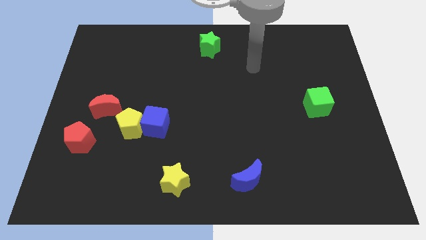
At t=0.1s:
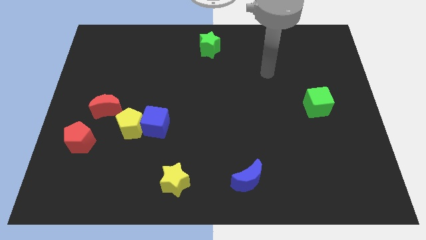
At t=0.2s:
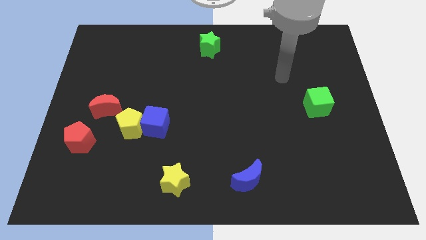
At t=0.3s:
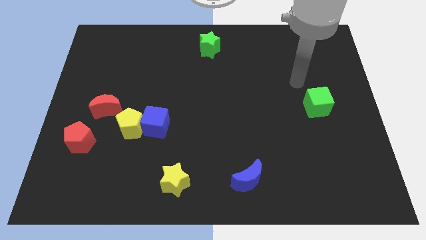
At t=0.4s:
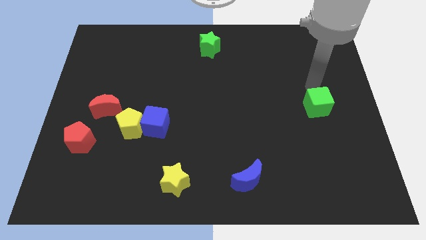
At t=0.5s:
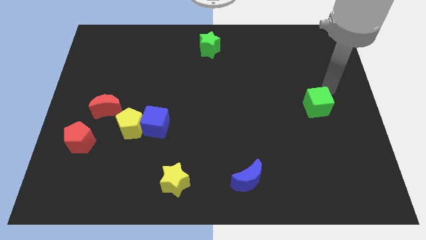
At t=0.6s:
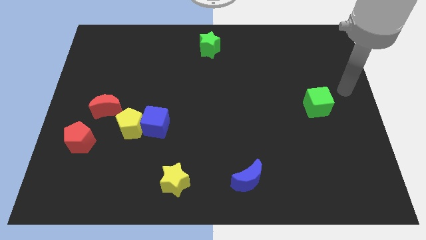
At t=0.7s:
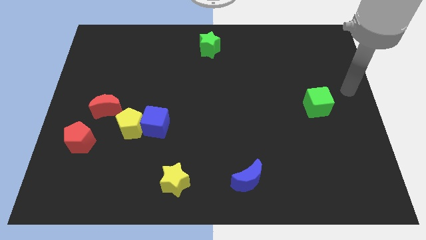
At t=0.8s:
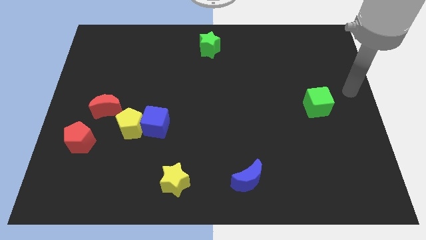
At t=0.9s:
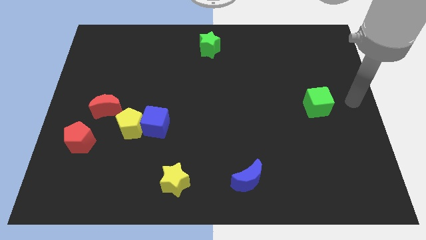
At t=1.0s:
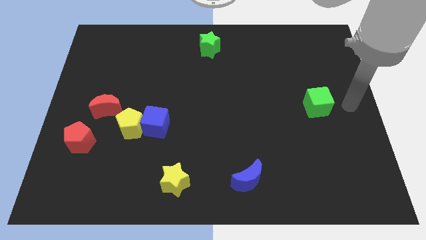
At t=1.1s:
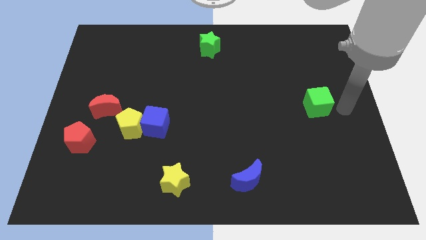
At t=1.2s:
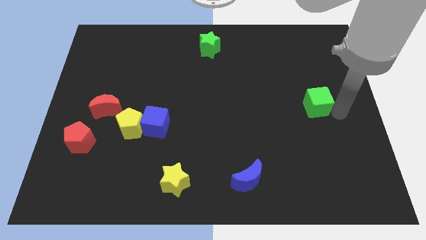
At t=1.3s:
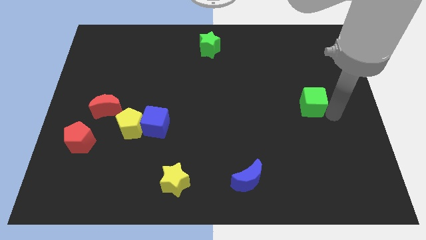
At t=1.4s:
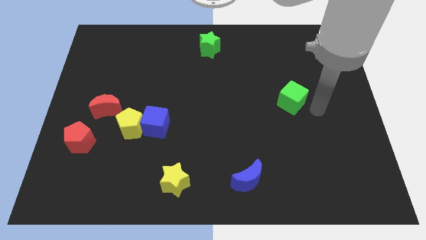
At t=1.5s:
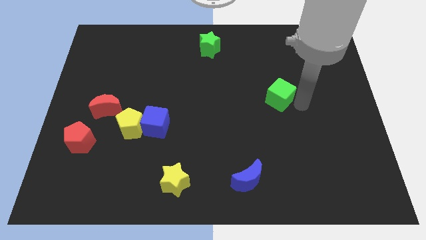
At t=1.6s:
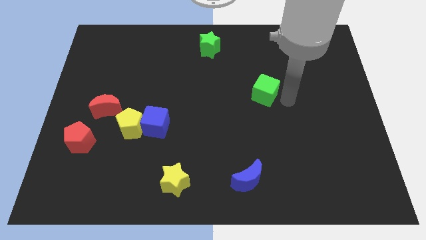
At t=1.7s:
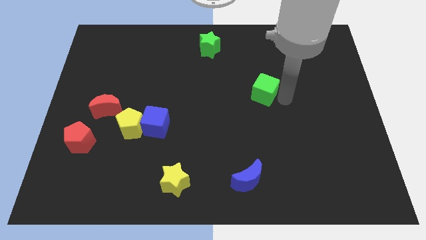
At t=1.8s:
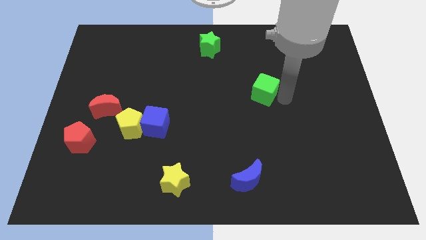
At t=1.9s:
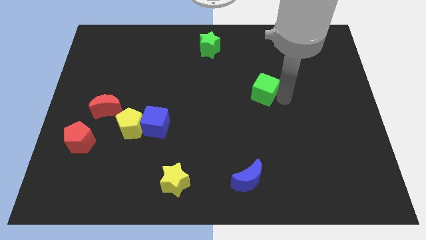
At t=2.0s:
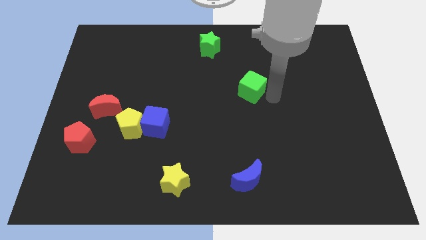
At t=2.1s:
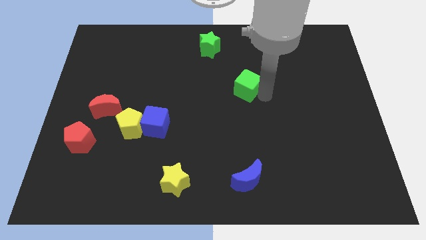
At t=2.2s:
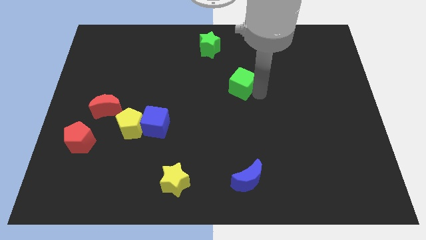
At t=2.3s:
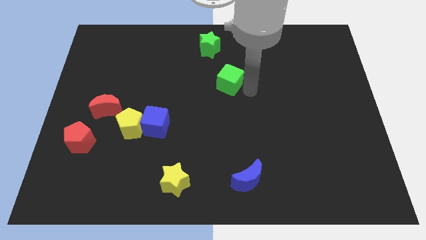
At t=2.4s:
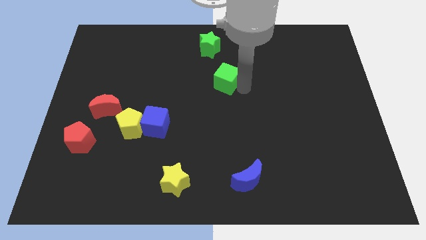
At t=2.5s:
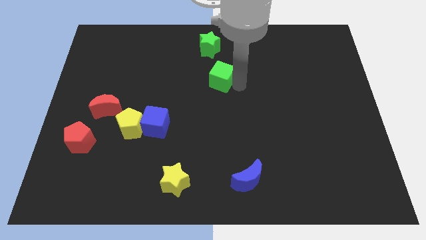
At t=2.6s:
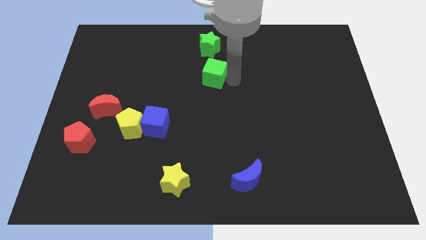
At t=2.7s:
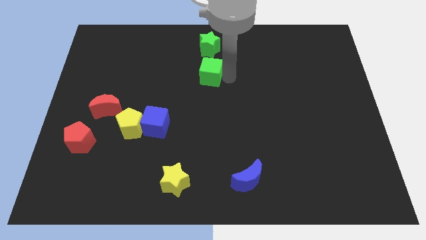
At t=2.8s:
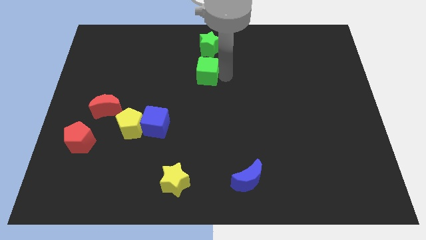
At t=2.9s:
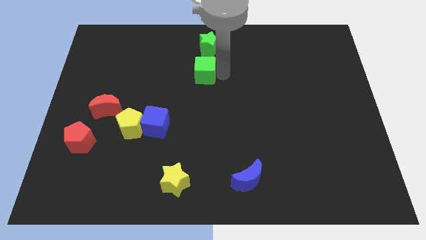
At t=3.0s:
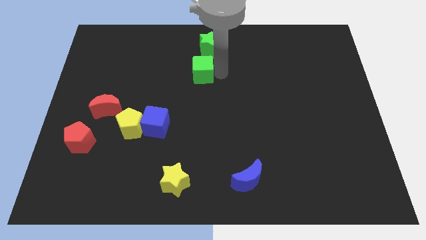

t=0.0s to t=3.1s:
move the green cube below the green star

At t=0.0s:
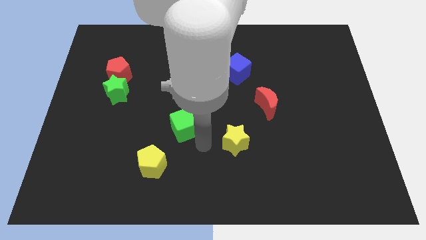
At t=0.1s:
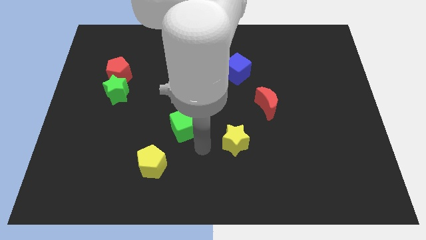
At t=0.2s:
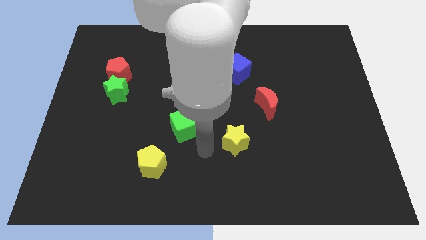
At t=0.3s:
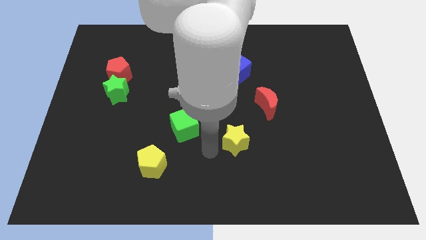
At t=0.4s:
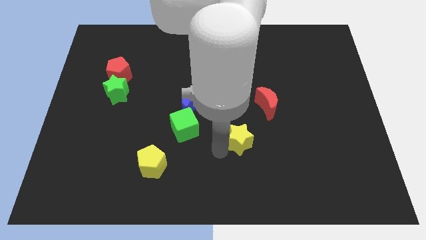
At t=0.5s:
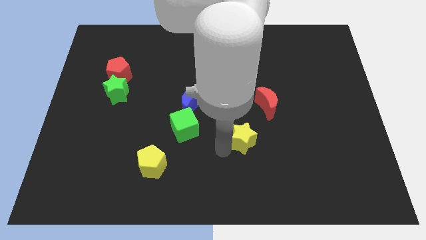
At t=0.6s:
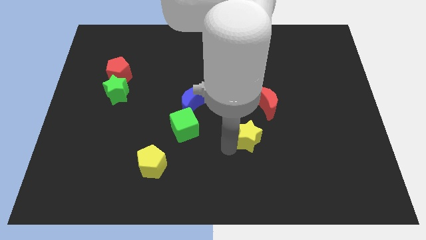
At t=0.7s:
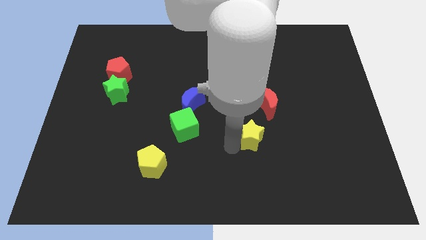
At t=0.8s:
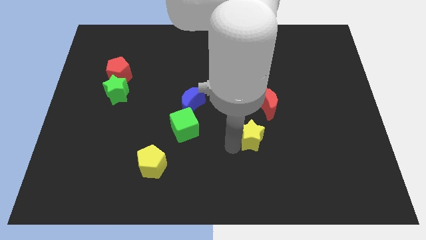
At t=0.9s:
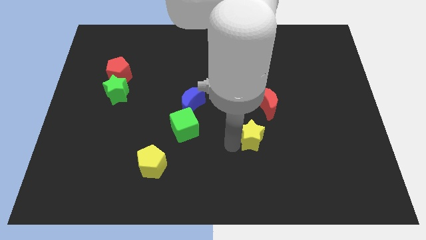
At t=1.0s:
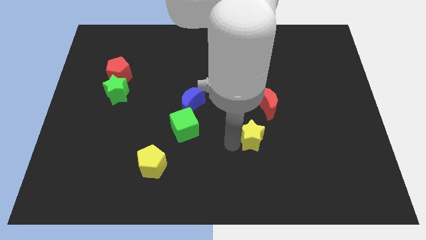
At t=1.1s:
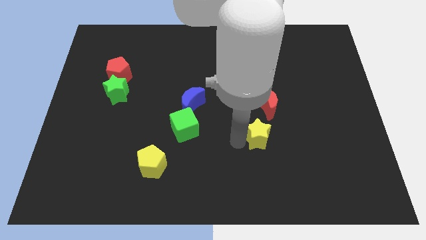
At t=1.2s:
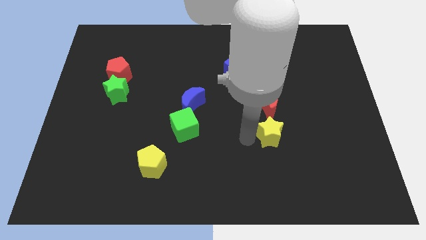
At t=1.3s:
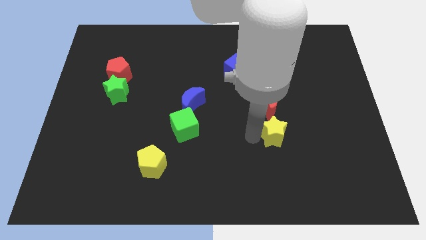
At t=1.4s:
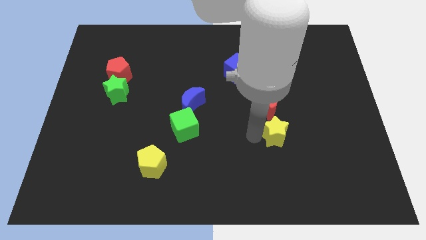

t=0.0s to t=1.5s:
move the yellow star below the red crescent

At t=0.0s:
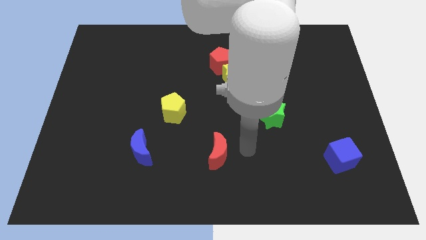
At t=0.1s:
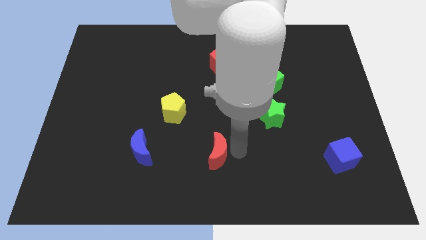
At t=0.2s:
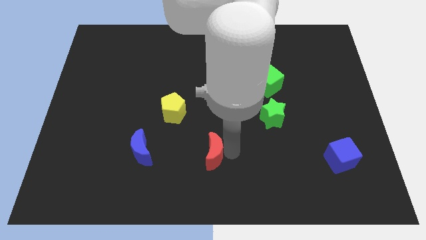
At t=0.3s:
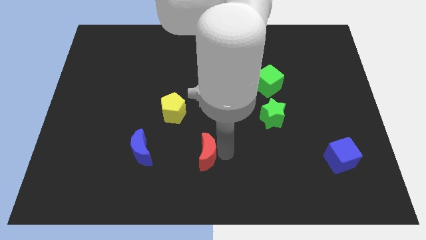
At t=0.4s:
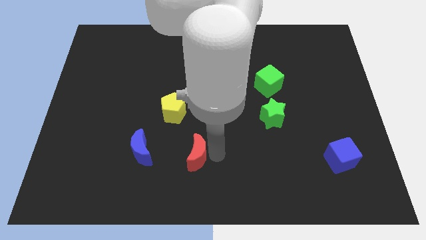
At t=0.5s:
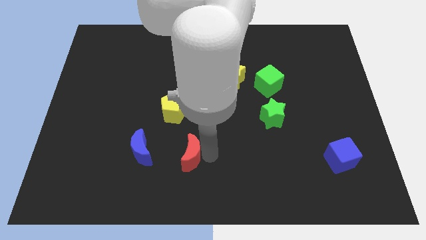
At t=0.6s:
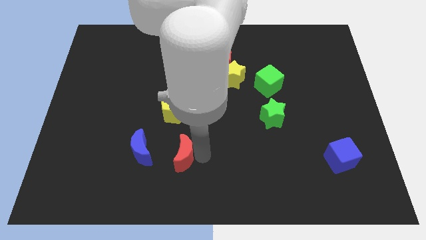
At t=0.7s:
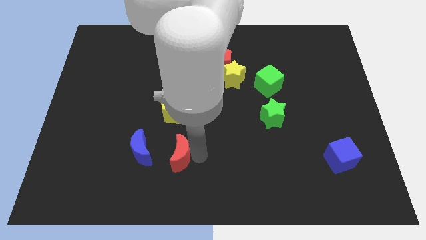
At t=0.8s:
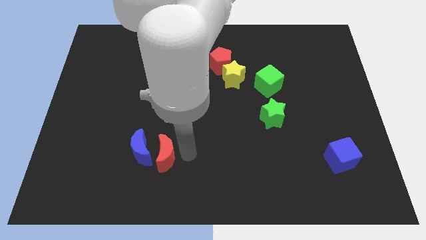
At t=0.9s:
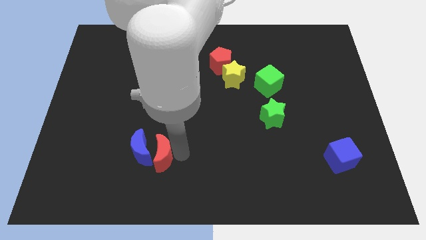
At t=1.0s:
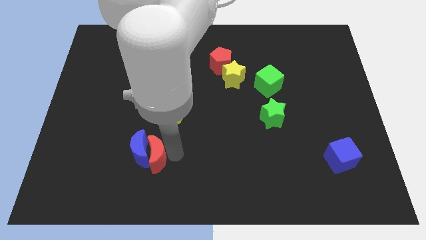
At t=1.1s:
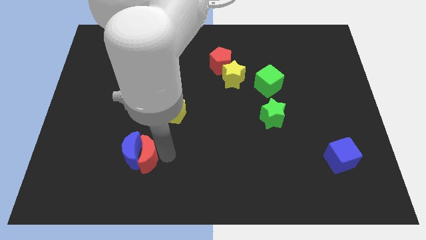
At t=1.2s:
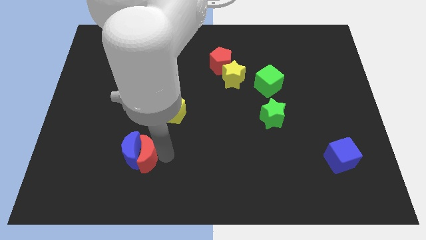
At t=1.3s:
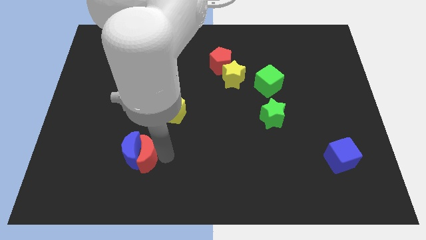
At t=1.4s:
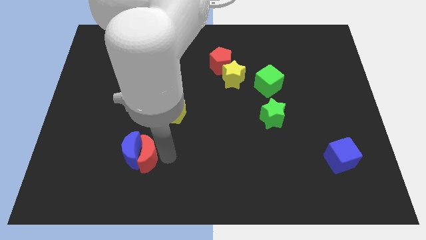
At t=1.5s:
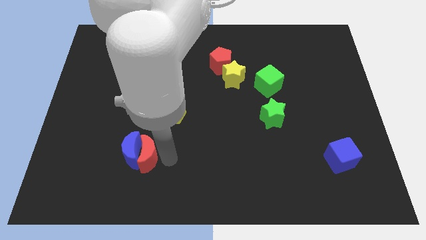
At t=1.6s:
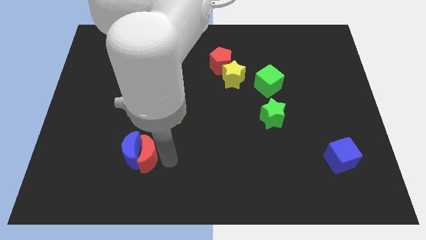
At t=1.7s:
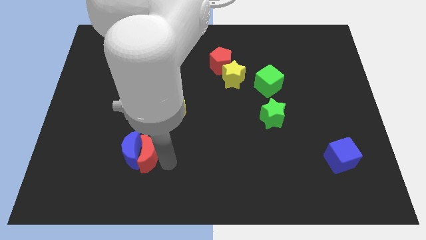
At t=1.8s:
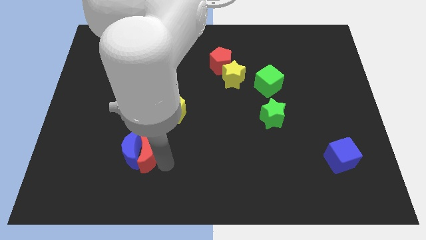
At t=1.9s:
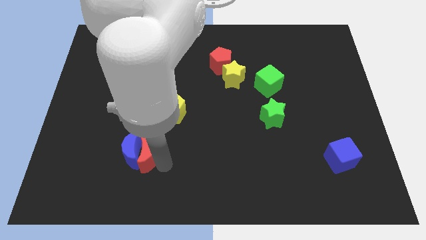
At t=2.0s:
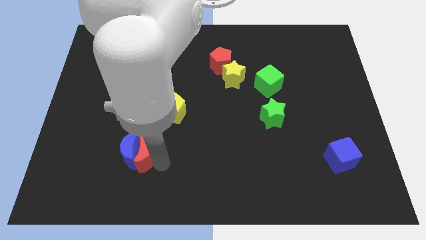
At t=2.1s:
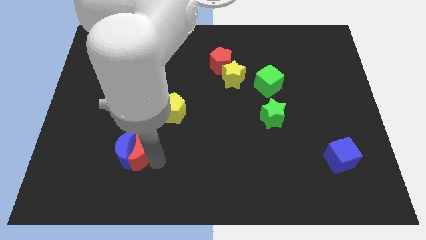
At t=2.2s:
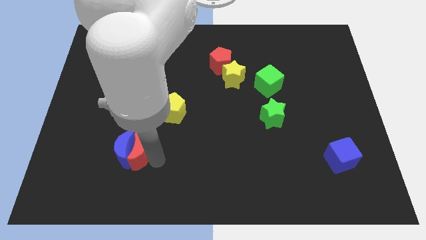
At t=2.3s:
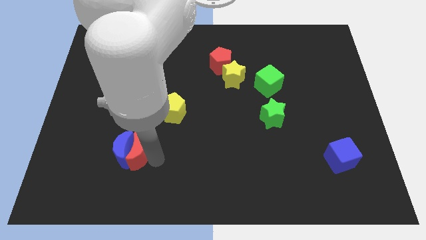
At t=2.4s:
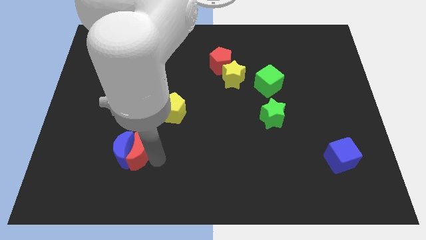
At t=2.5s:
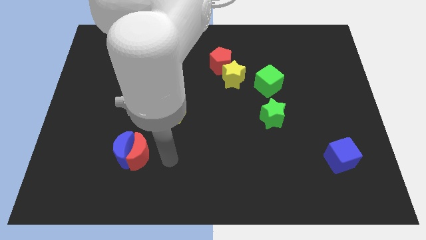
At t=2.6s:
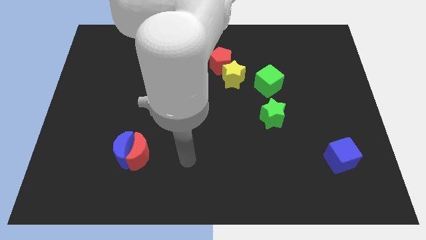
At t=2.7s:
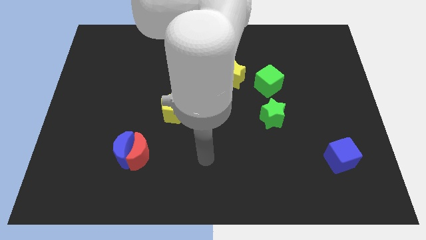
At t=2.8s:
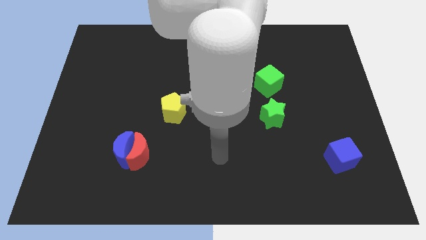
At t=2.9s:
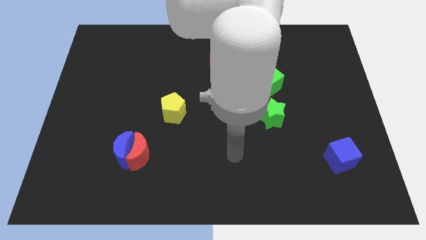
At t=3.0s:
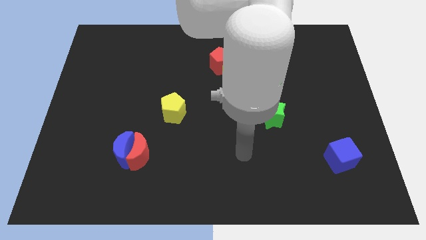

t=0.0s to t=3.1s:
move the red moon near to the blue moon

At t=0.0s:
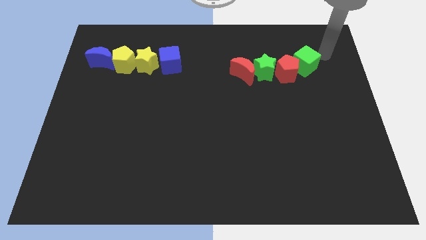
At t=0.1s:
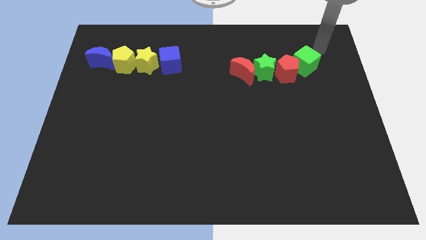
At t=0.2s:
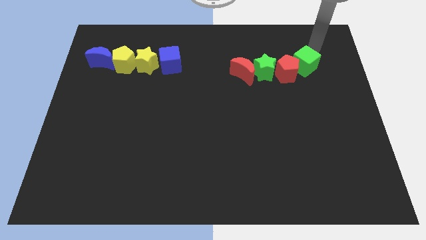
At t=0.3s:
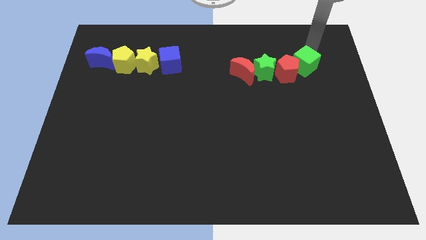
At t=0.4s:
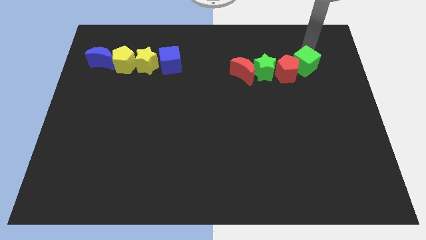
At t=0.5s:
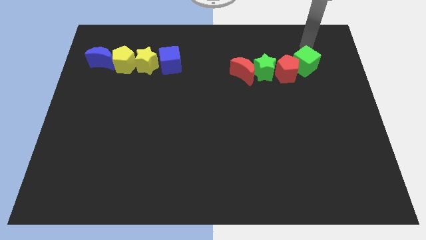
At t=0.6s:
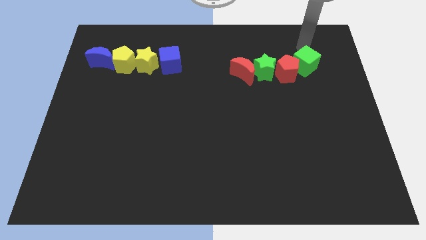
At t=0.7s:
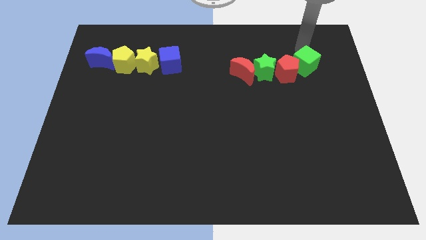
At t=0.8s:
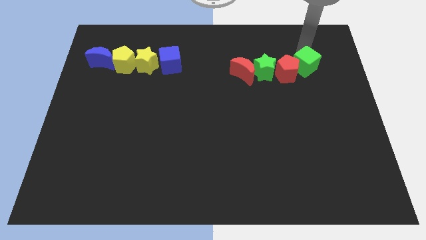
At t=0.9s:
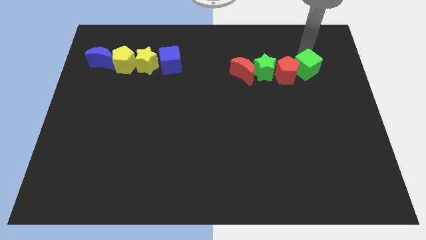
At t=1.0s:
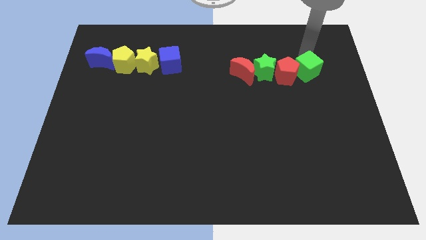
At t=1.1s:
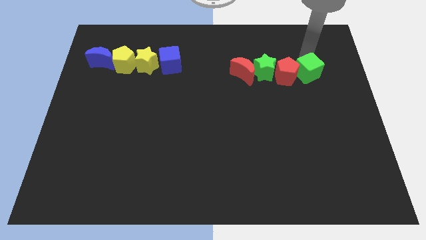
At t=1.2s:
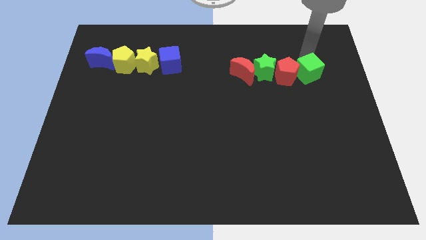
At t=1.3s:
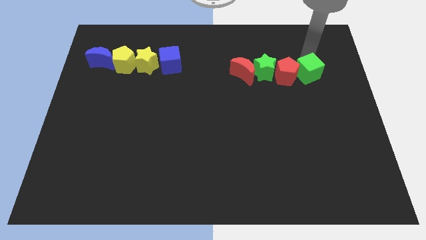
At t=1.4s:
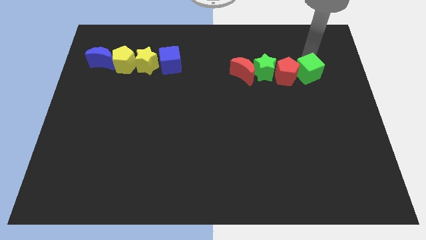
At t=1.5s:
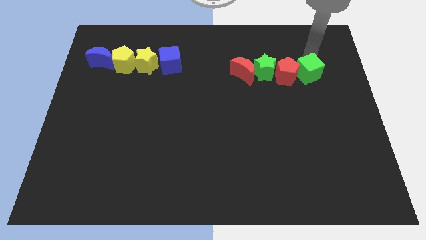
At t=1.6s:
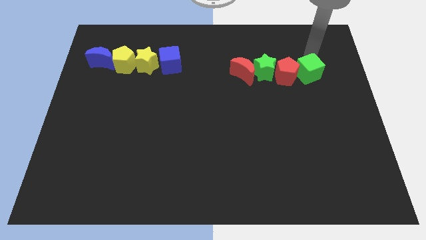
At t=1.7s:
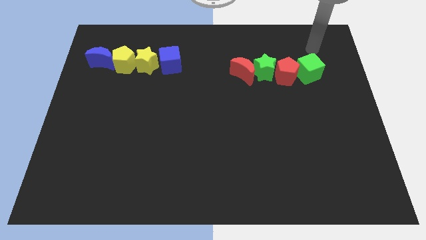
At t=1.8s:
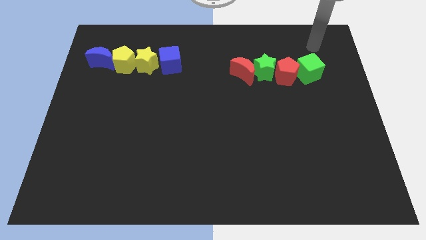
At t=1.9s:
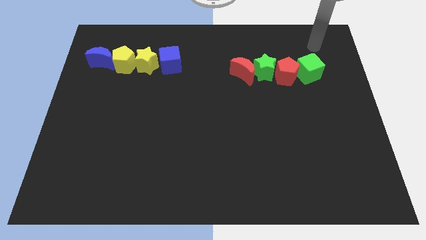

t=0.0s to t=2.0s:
slightly push the green cube to the right of the red pentagon
